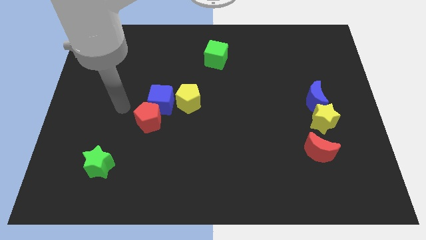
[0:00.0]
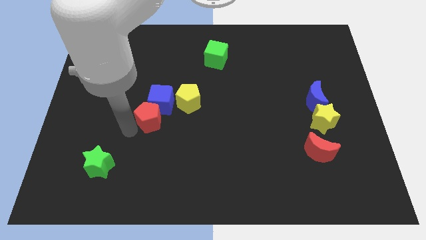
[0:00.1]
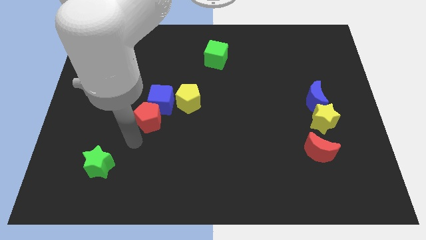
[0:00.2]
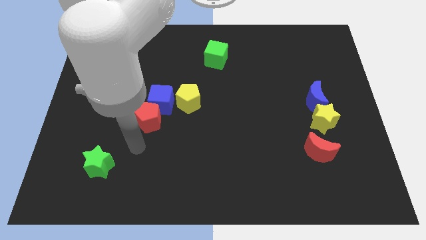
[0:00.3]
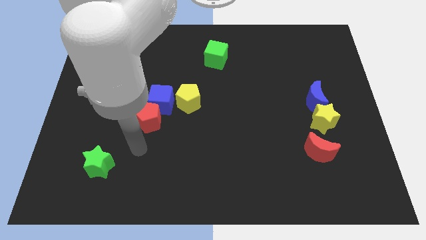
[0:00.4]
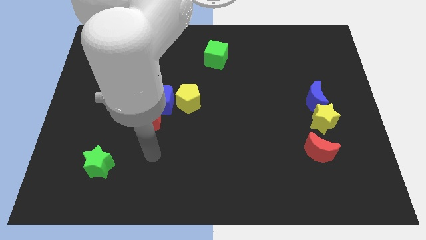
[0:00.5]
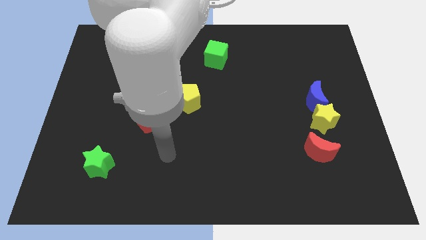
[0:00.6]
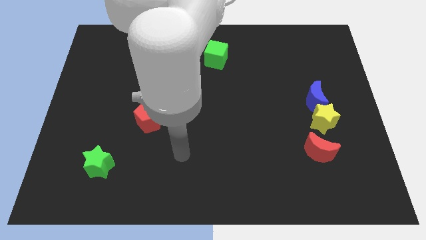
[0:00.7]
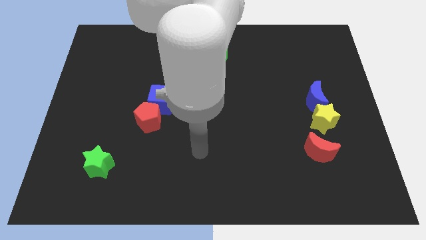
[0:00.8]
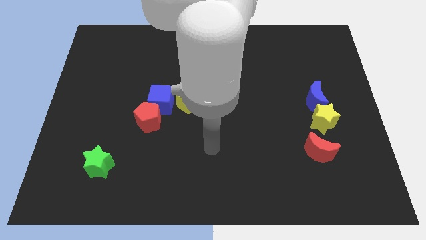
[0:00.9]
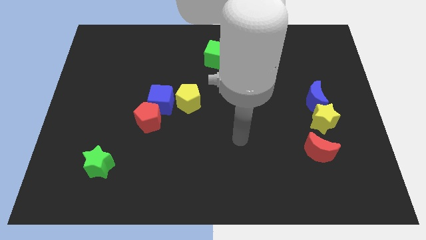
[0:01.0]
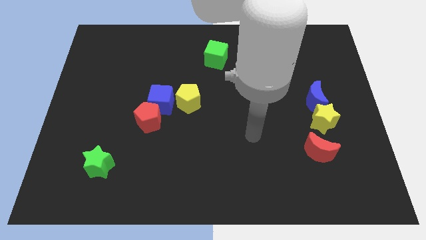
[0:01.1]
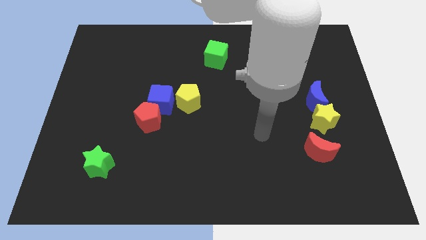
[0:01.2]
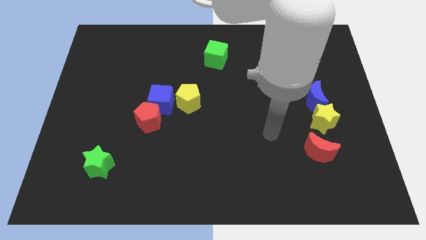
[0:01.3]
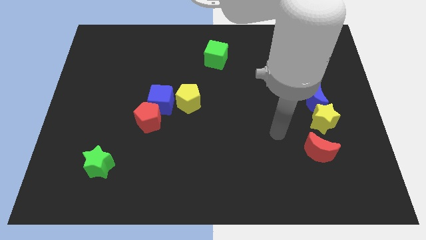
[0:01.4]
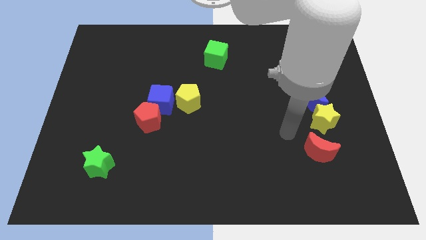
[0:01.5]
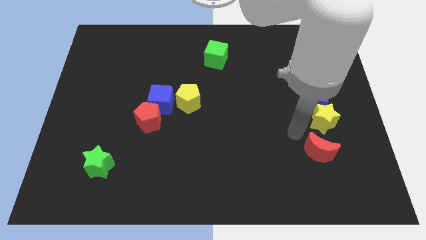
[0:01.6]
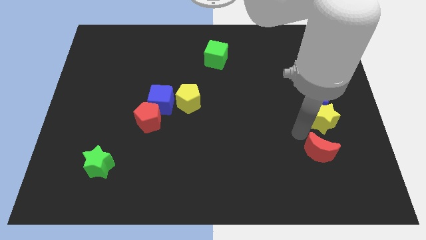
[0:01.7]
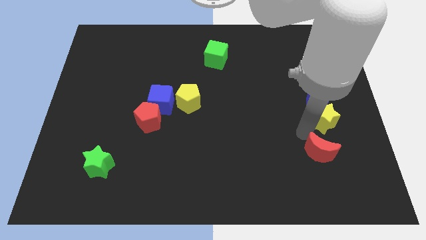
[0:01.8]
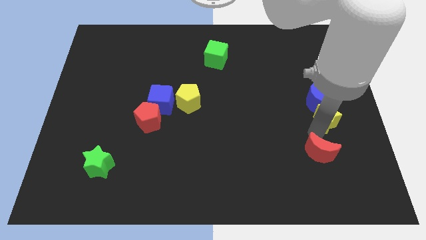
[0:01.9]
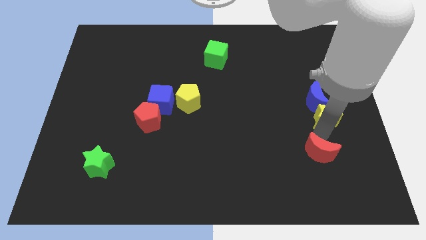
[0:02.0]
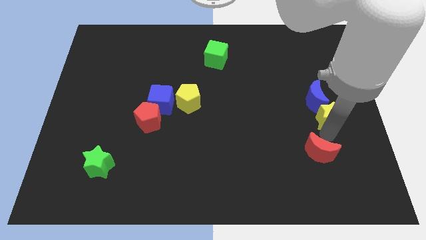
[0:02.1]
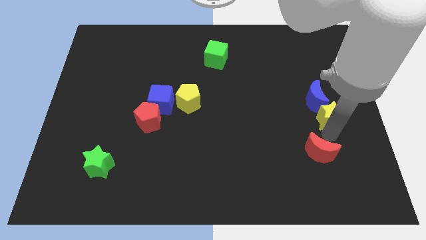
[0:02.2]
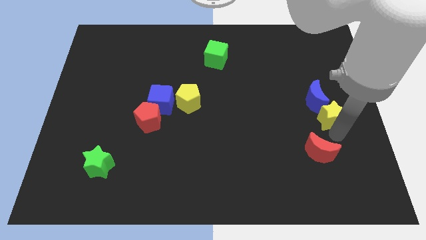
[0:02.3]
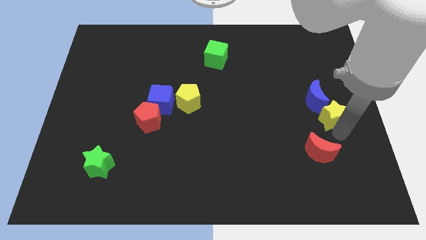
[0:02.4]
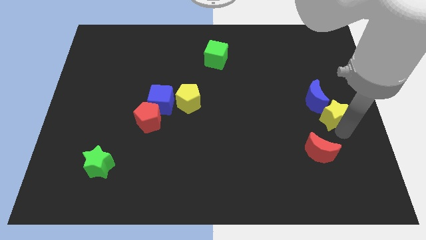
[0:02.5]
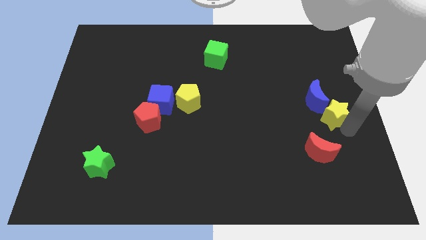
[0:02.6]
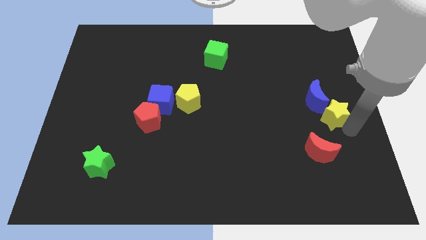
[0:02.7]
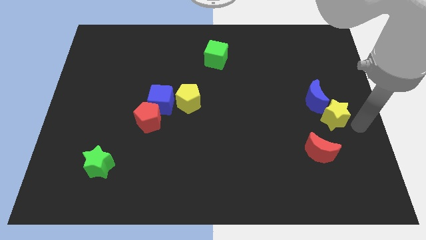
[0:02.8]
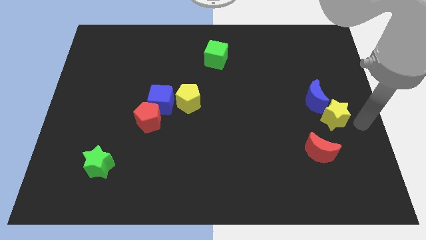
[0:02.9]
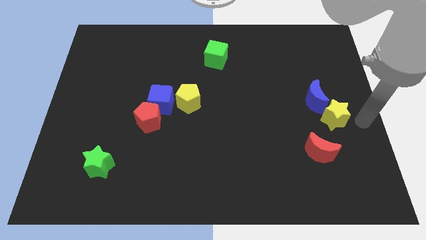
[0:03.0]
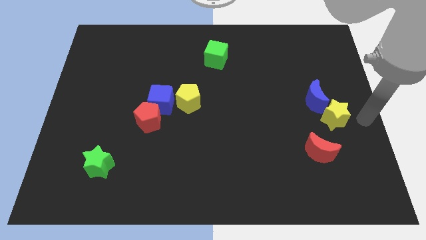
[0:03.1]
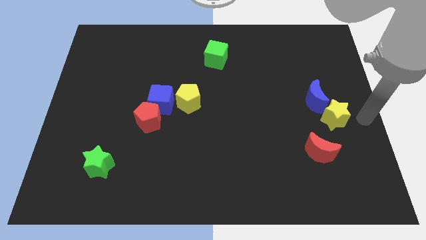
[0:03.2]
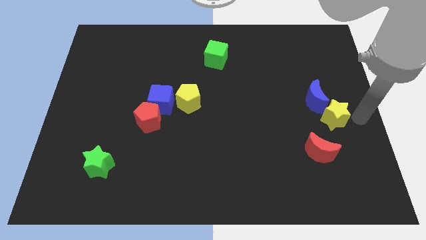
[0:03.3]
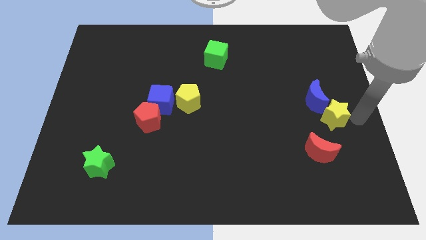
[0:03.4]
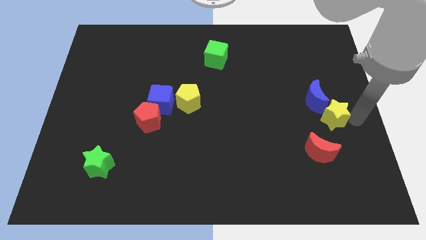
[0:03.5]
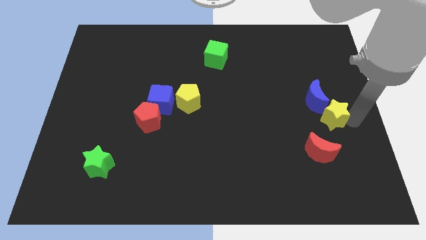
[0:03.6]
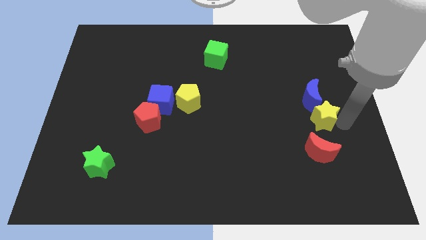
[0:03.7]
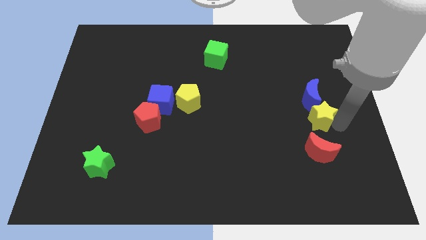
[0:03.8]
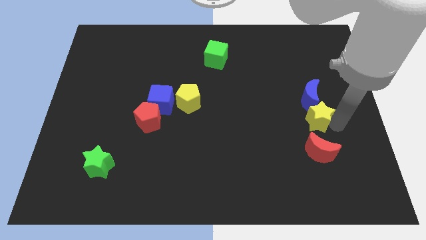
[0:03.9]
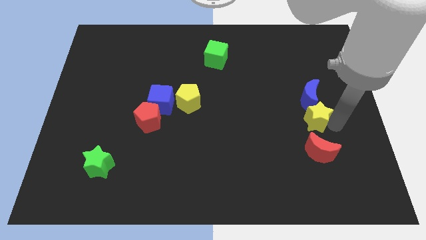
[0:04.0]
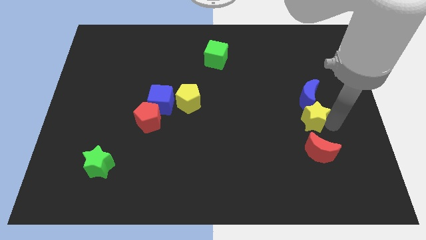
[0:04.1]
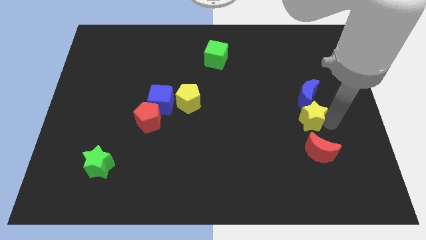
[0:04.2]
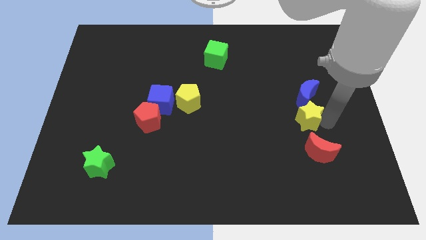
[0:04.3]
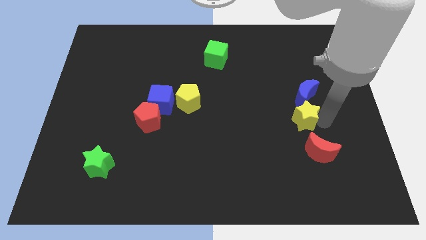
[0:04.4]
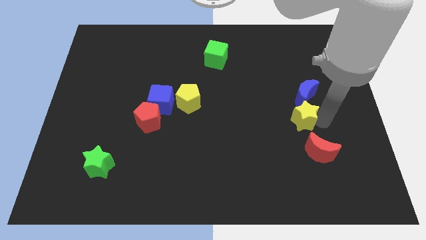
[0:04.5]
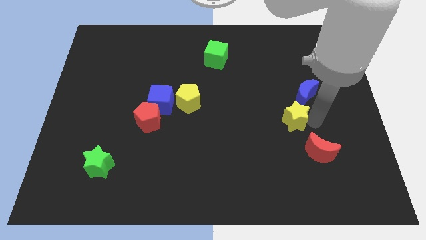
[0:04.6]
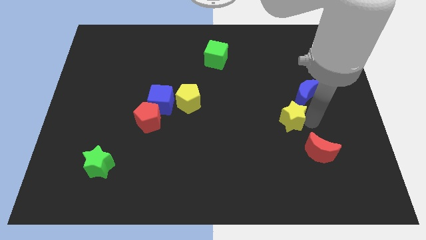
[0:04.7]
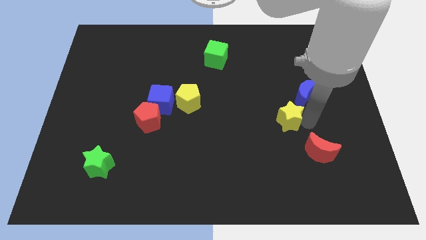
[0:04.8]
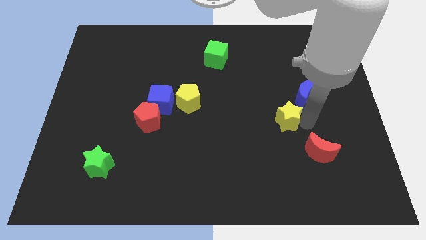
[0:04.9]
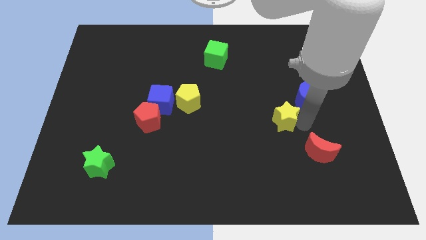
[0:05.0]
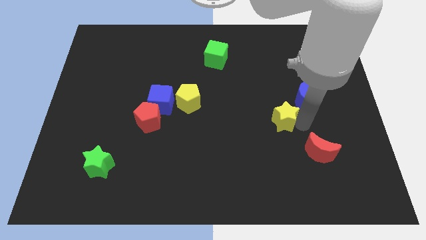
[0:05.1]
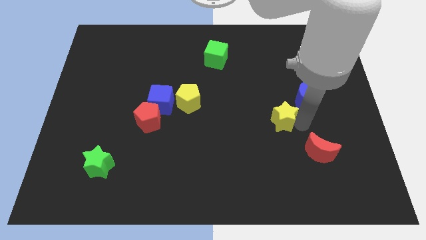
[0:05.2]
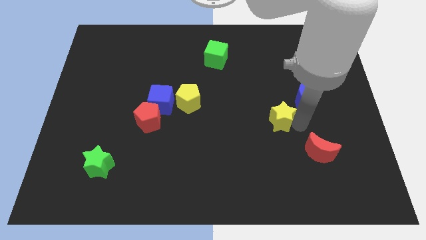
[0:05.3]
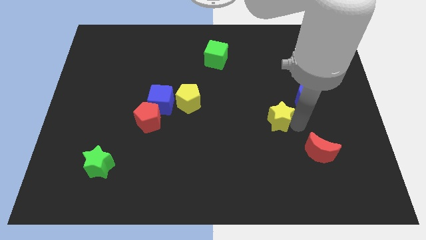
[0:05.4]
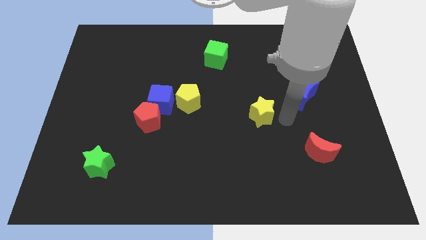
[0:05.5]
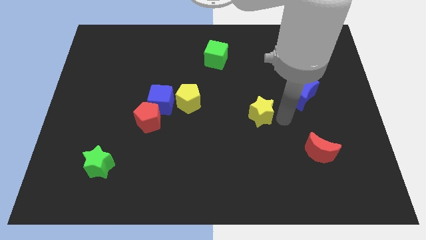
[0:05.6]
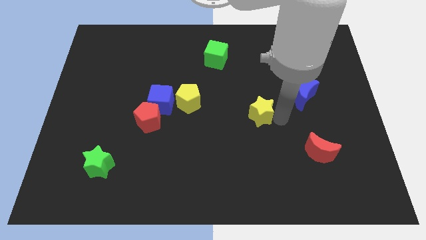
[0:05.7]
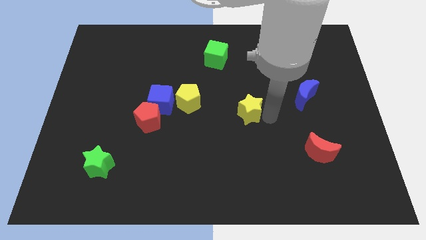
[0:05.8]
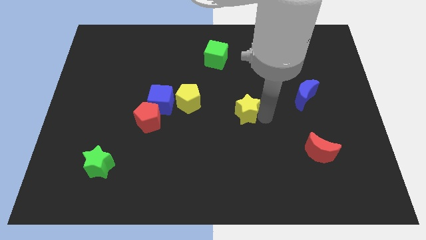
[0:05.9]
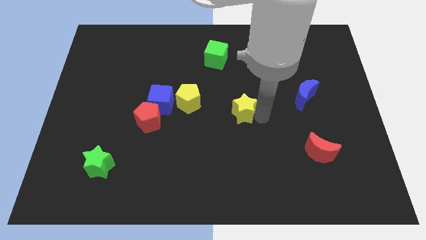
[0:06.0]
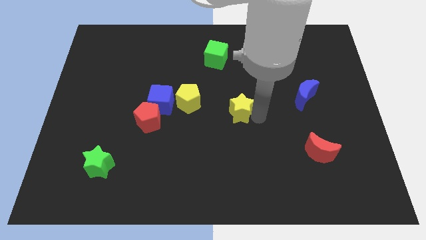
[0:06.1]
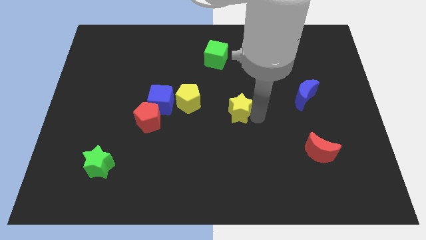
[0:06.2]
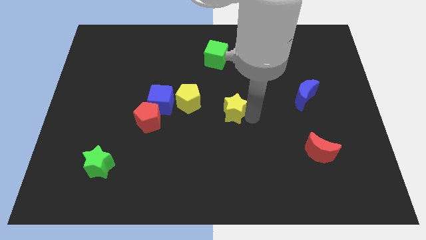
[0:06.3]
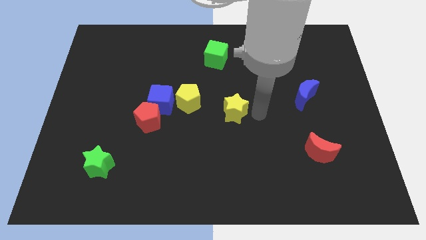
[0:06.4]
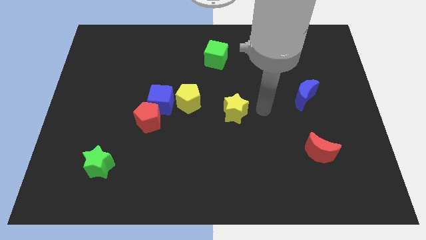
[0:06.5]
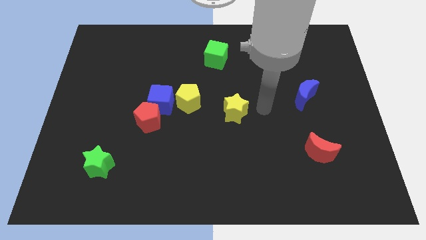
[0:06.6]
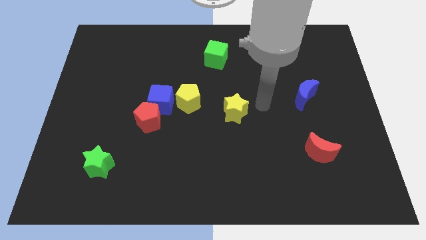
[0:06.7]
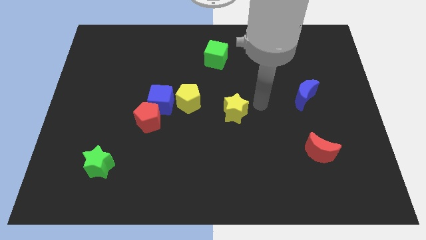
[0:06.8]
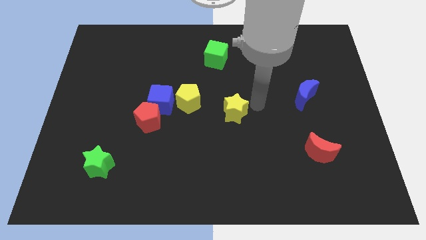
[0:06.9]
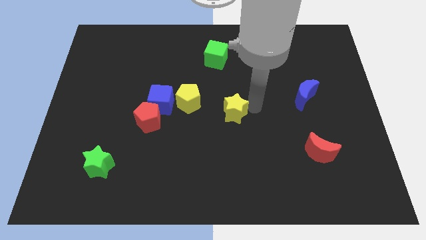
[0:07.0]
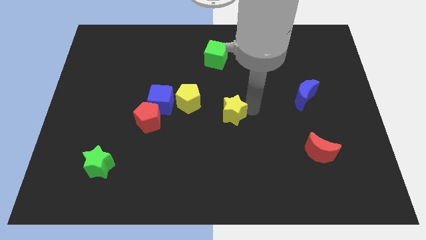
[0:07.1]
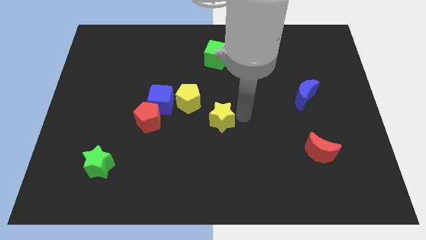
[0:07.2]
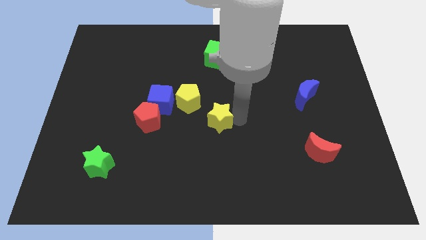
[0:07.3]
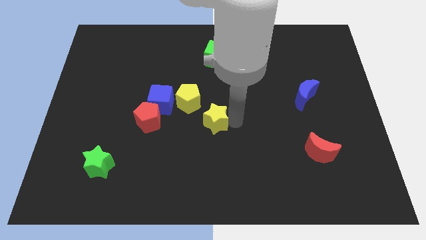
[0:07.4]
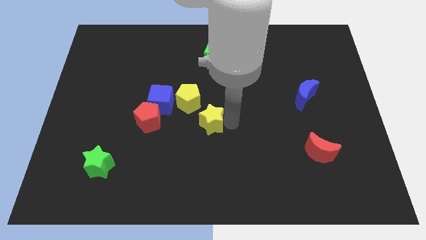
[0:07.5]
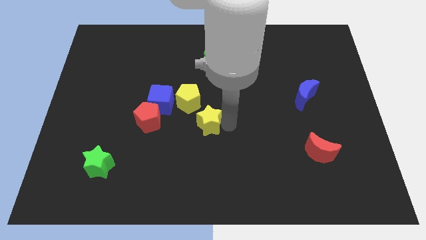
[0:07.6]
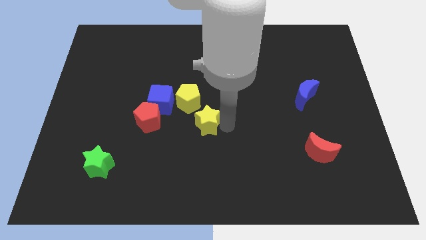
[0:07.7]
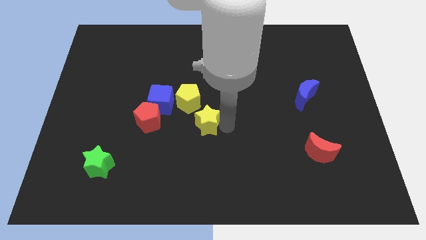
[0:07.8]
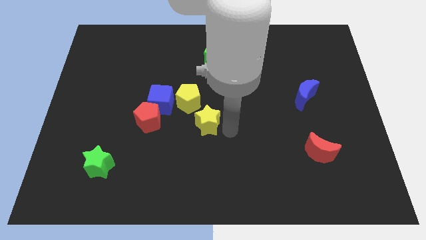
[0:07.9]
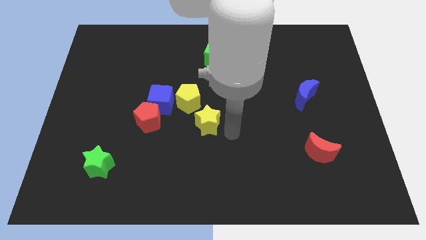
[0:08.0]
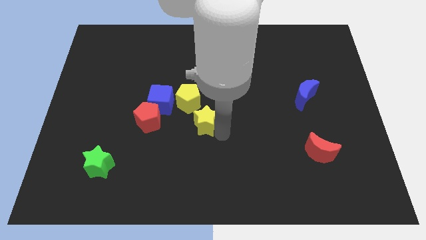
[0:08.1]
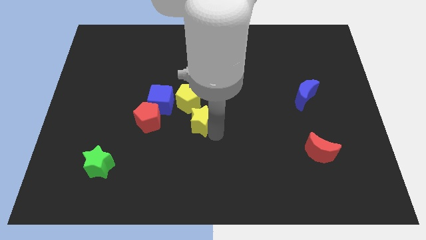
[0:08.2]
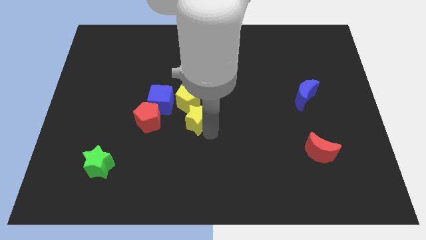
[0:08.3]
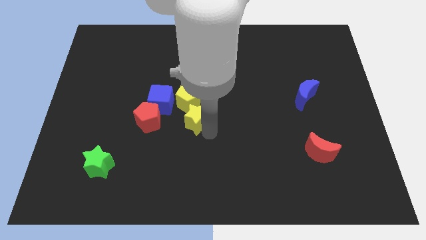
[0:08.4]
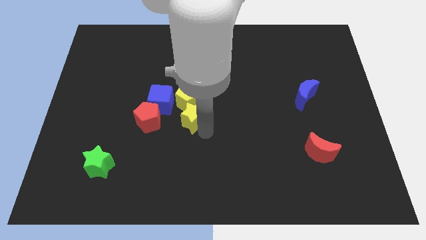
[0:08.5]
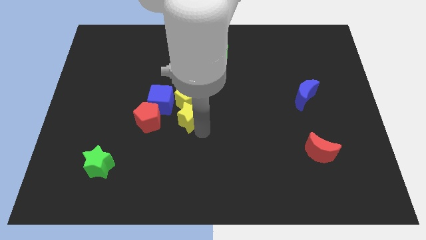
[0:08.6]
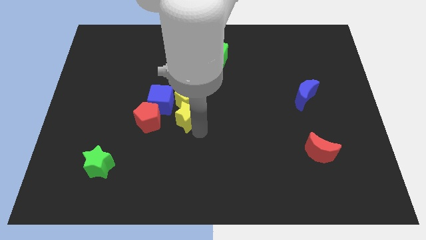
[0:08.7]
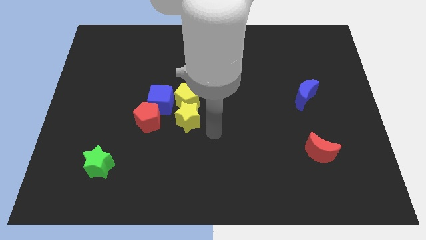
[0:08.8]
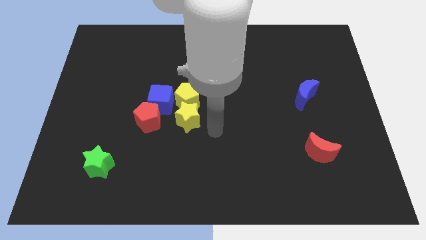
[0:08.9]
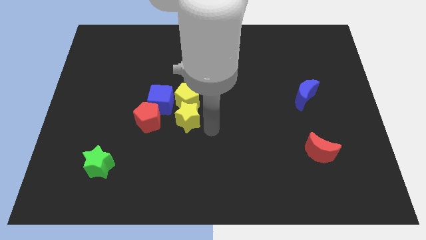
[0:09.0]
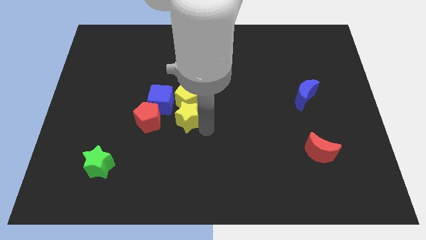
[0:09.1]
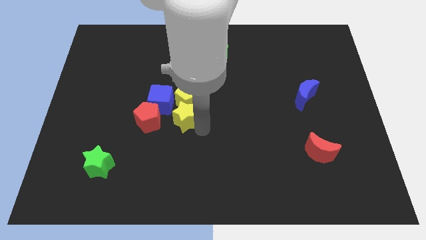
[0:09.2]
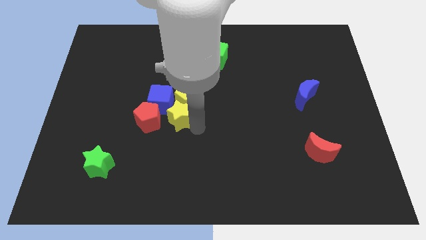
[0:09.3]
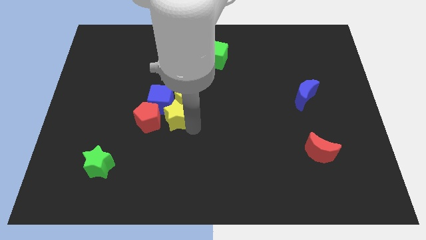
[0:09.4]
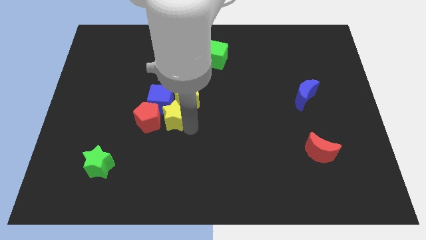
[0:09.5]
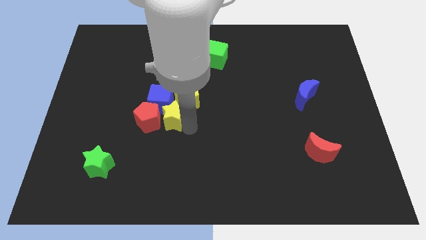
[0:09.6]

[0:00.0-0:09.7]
put the yellow star close to the blue cube
